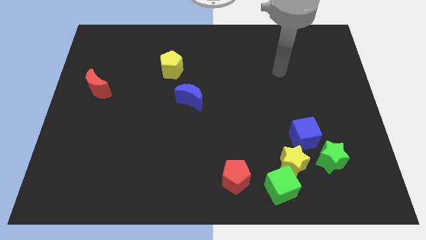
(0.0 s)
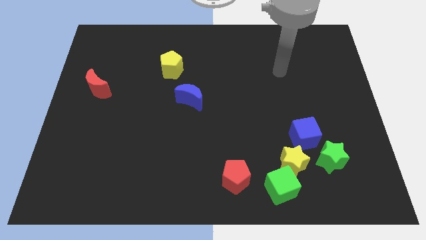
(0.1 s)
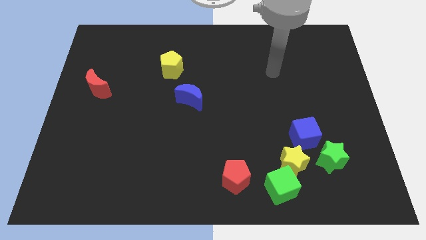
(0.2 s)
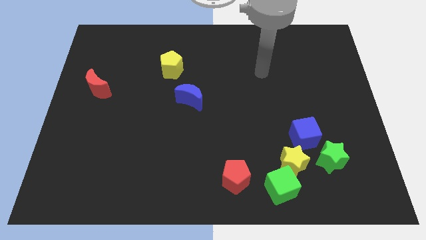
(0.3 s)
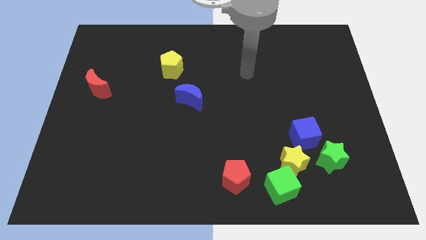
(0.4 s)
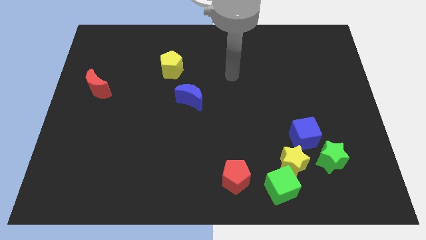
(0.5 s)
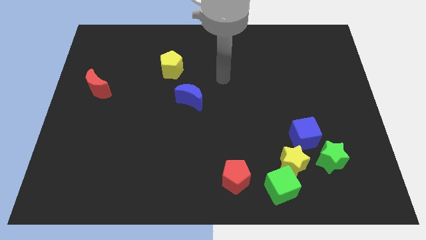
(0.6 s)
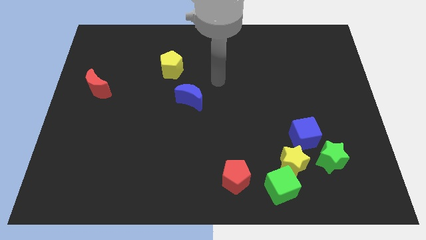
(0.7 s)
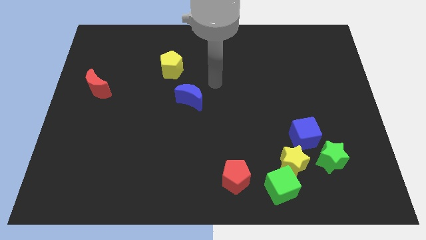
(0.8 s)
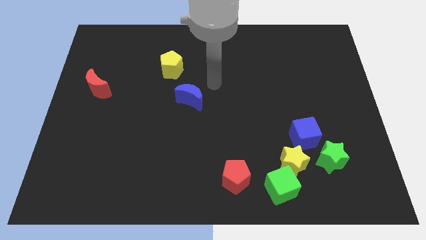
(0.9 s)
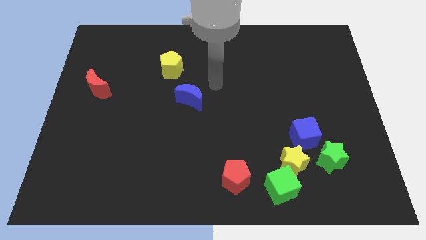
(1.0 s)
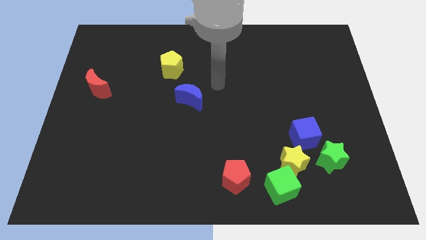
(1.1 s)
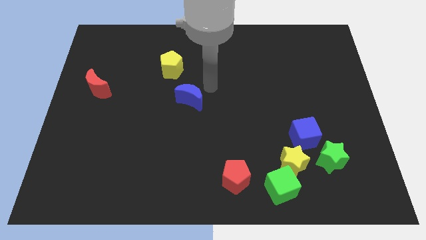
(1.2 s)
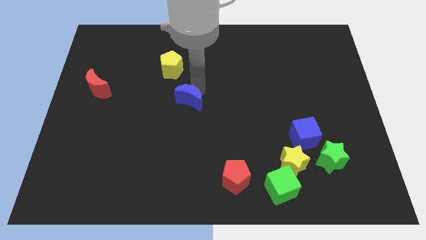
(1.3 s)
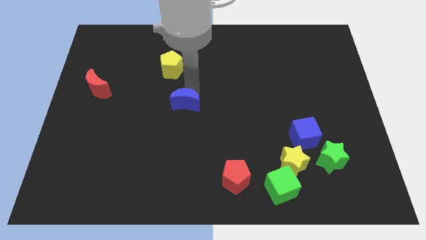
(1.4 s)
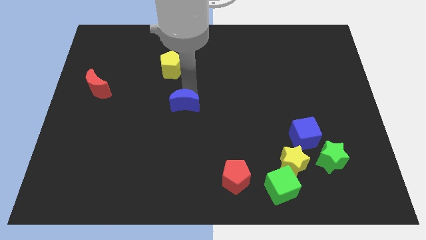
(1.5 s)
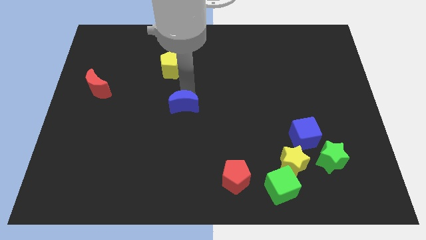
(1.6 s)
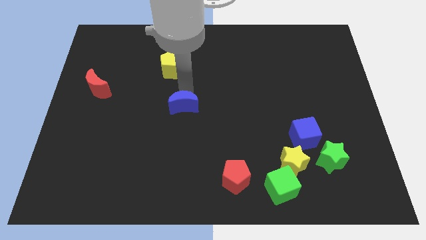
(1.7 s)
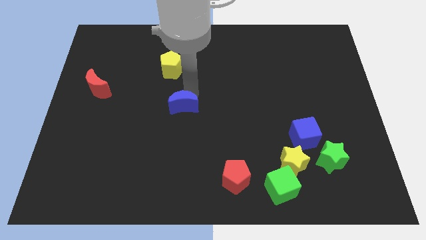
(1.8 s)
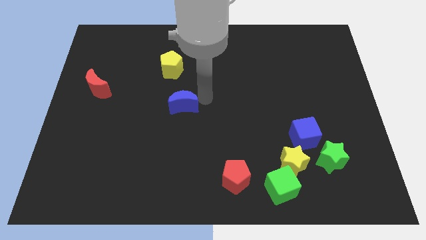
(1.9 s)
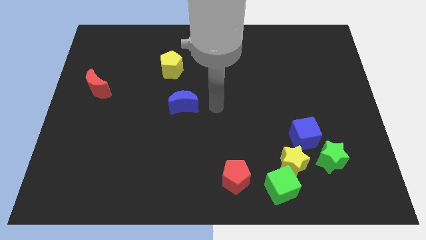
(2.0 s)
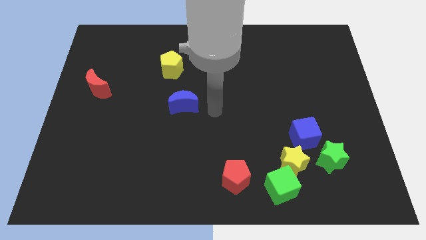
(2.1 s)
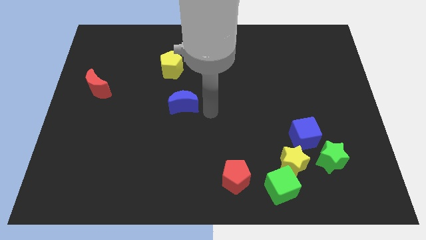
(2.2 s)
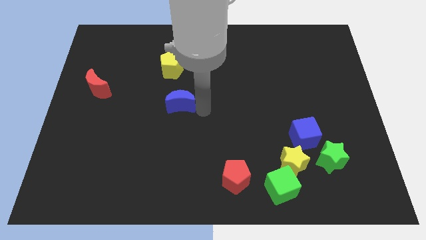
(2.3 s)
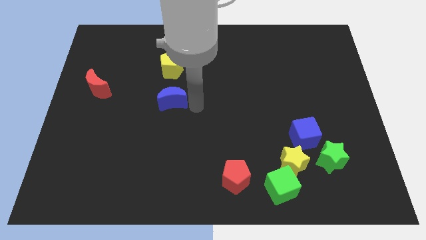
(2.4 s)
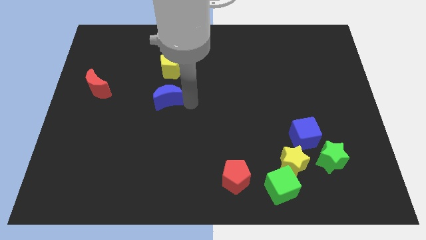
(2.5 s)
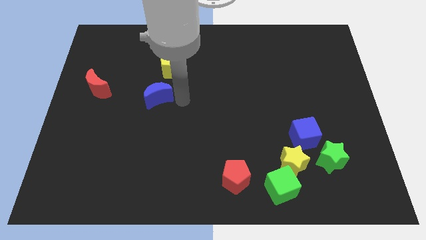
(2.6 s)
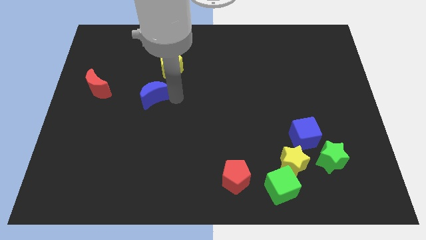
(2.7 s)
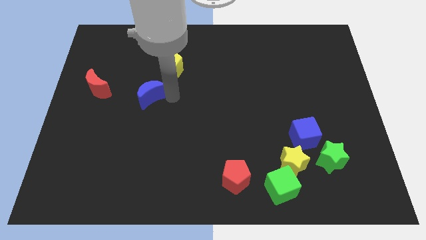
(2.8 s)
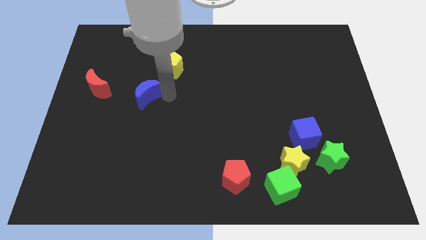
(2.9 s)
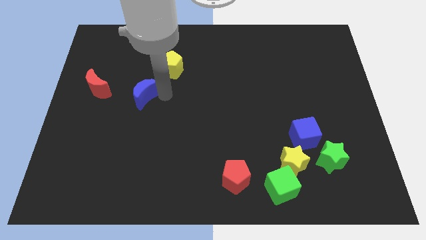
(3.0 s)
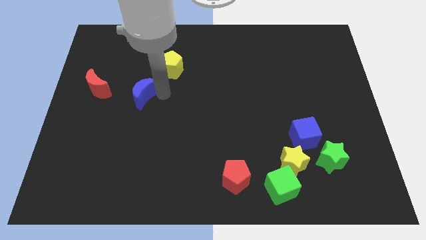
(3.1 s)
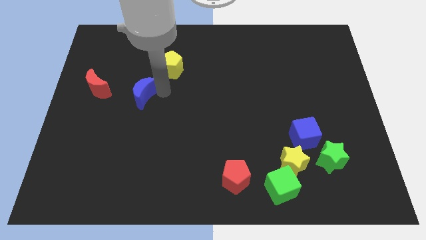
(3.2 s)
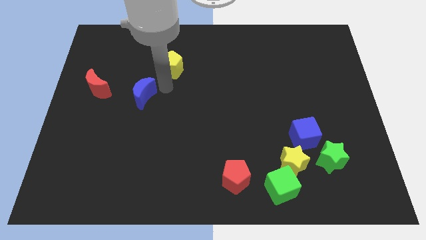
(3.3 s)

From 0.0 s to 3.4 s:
move the blue crescent to the top left of the board

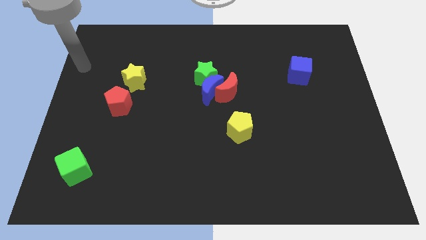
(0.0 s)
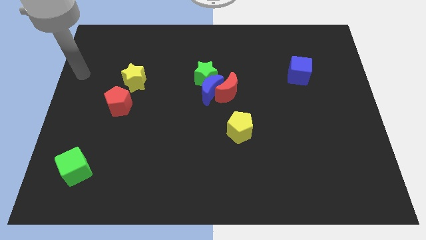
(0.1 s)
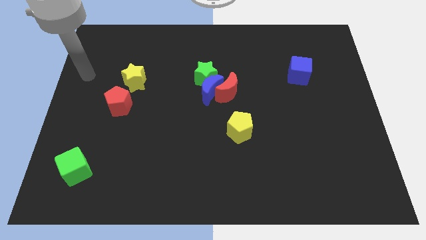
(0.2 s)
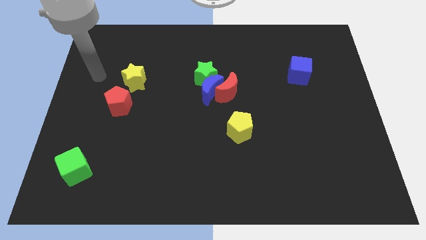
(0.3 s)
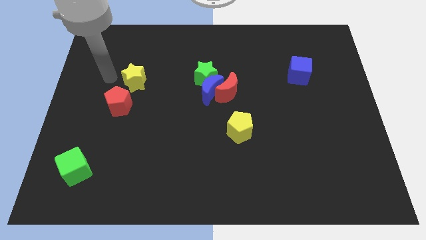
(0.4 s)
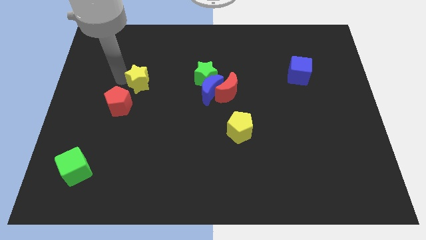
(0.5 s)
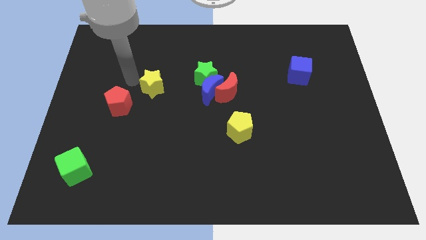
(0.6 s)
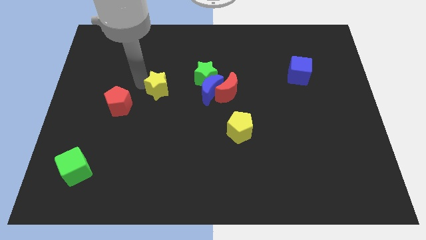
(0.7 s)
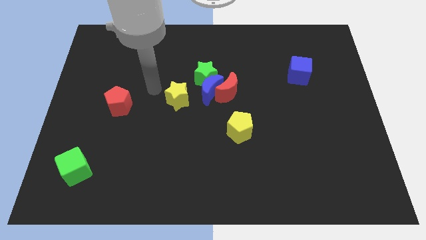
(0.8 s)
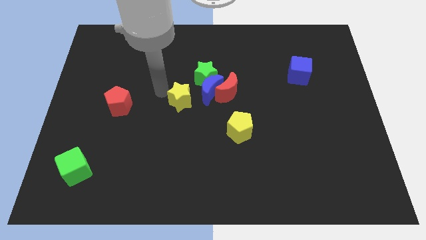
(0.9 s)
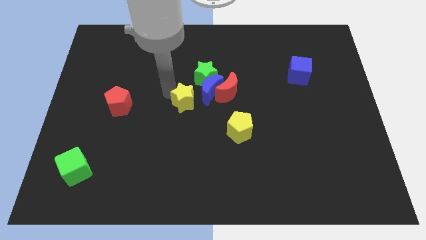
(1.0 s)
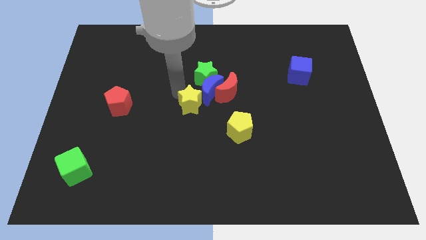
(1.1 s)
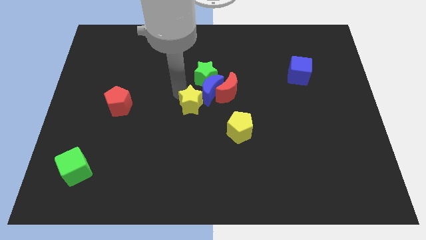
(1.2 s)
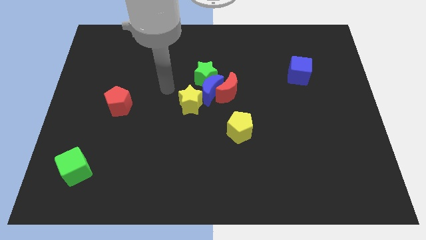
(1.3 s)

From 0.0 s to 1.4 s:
push the yellow star close to the blue crescent

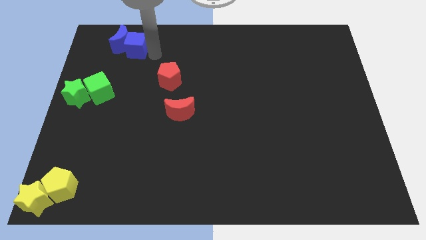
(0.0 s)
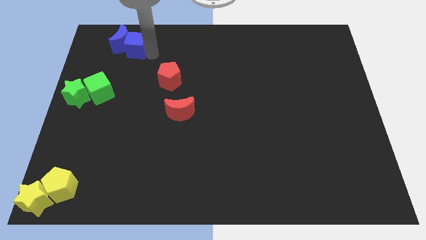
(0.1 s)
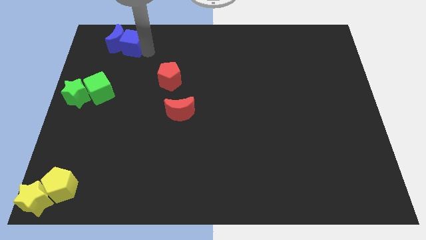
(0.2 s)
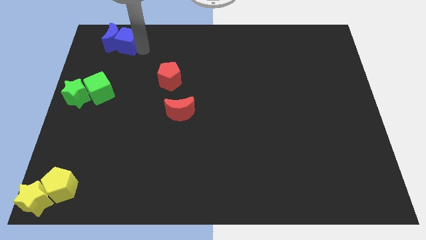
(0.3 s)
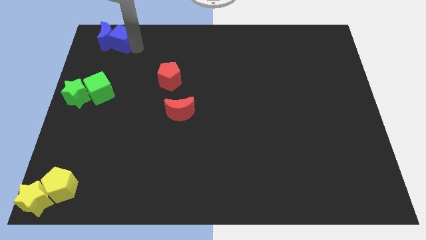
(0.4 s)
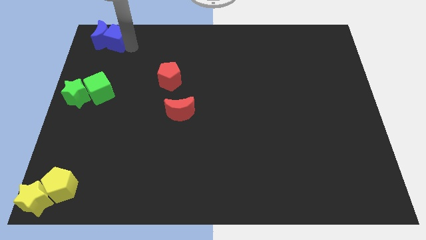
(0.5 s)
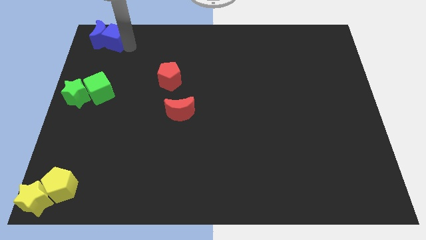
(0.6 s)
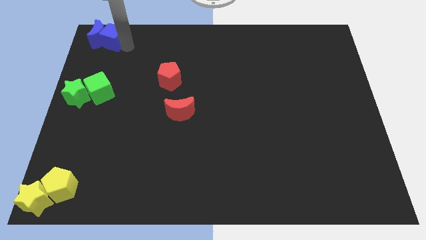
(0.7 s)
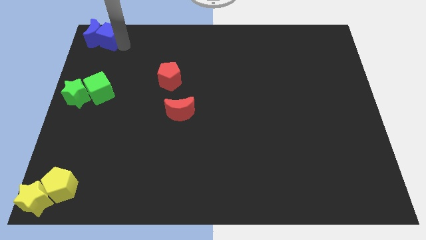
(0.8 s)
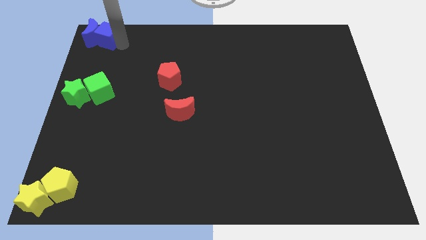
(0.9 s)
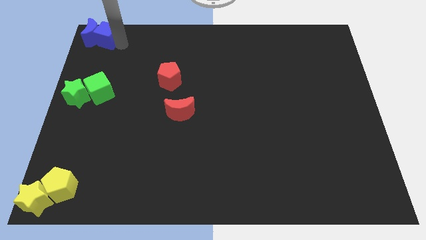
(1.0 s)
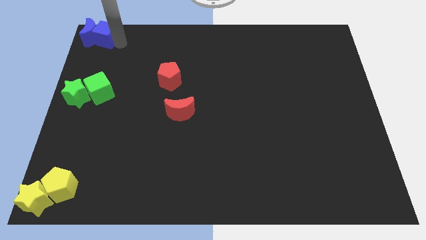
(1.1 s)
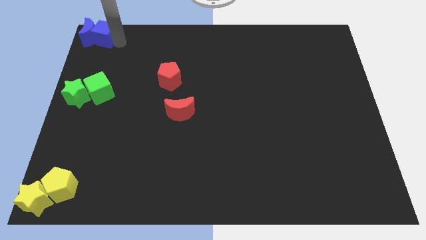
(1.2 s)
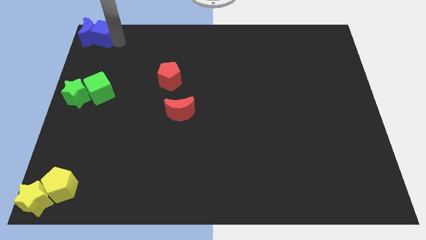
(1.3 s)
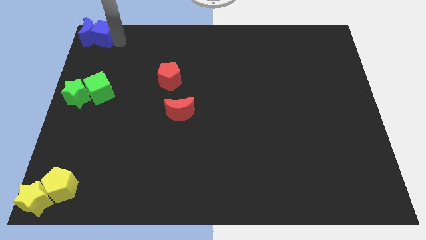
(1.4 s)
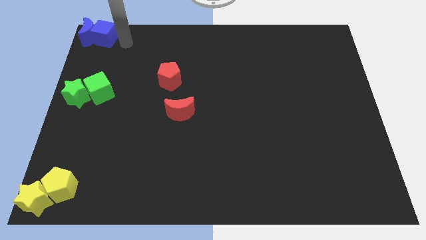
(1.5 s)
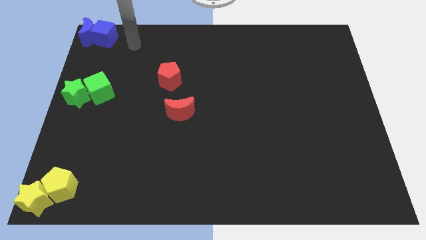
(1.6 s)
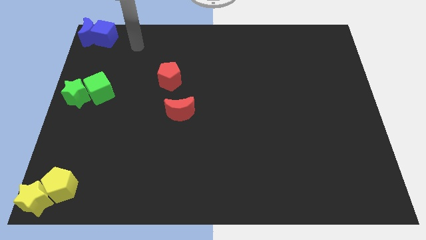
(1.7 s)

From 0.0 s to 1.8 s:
put the blue blocks at the top left corner of the board

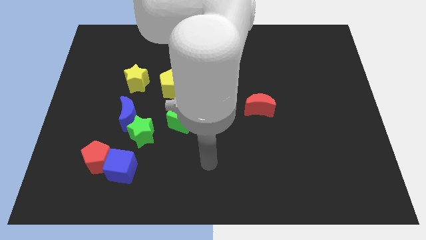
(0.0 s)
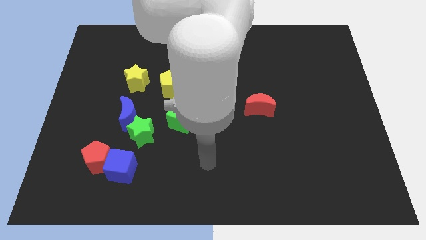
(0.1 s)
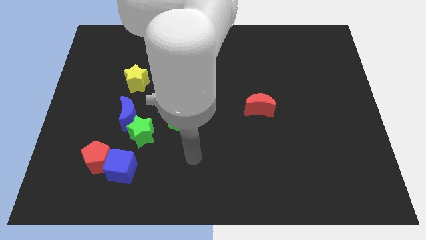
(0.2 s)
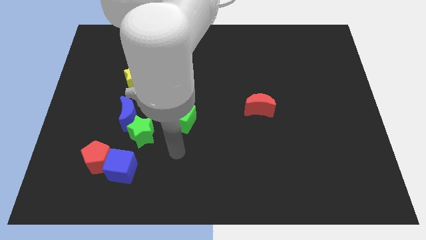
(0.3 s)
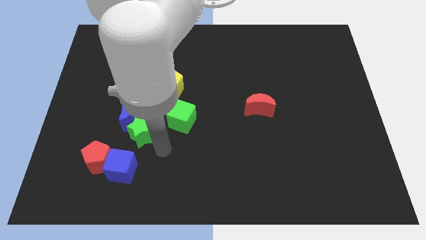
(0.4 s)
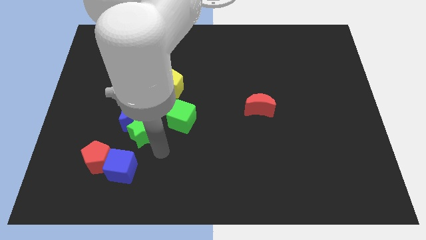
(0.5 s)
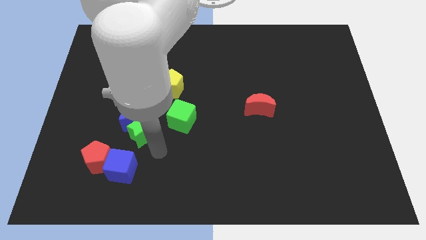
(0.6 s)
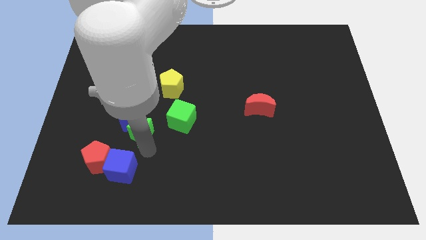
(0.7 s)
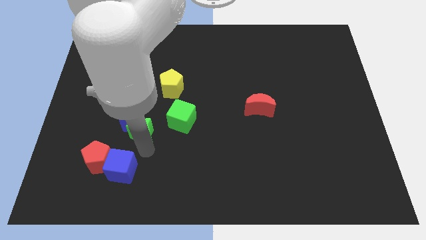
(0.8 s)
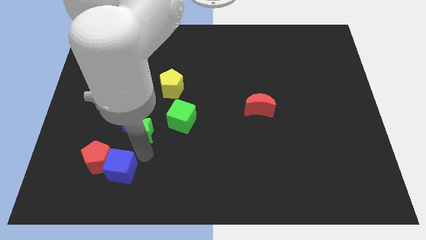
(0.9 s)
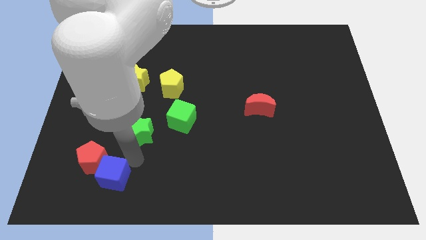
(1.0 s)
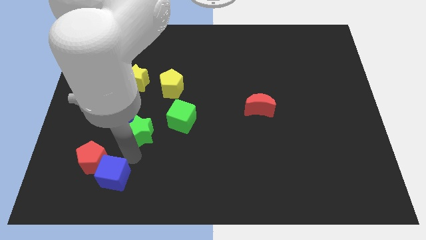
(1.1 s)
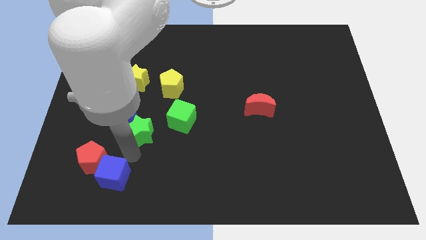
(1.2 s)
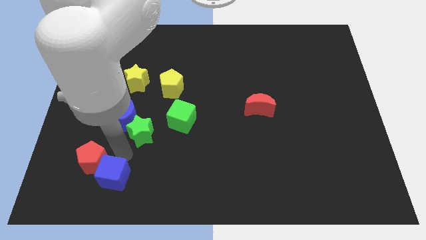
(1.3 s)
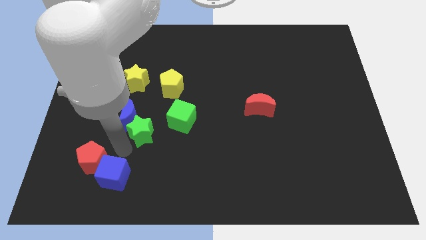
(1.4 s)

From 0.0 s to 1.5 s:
push the blue cube slightly down

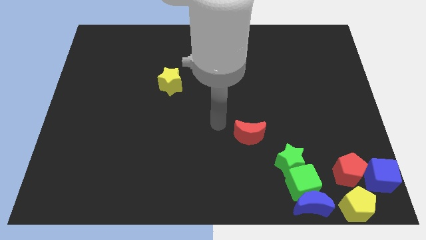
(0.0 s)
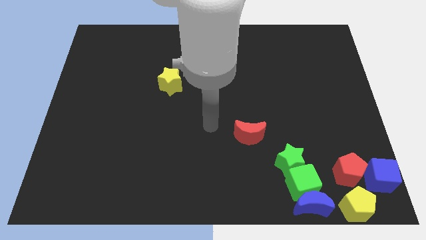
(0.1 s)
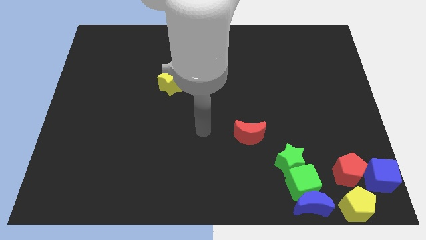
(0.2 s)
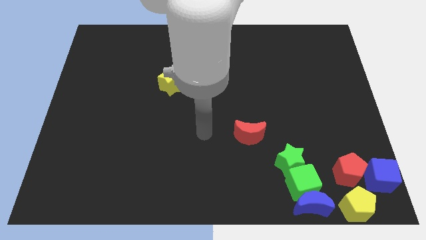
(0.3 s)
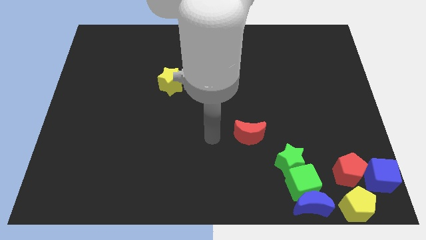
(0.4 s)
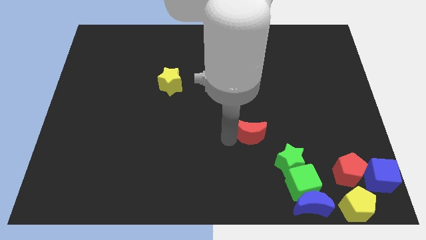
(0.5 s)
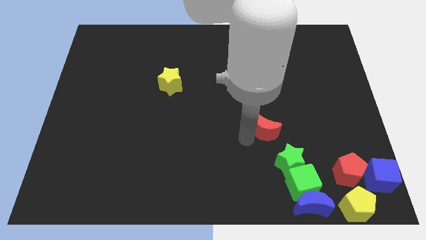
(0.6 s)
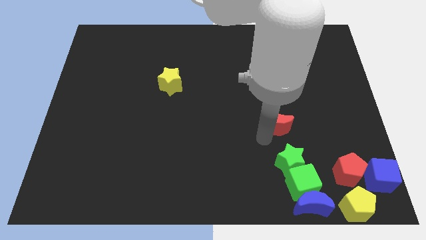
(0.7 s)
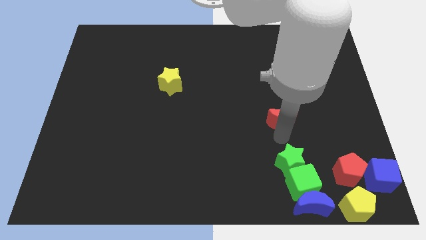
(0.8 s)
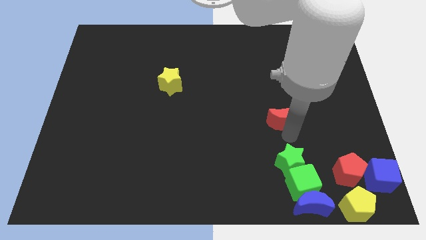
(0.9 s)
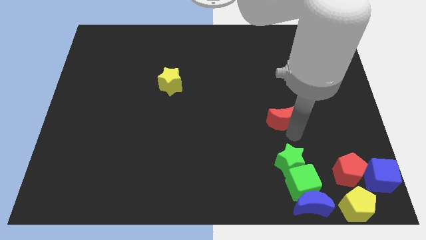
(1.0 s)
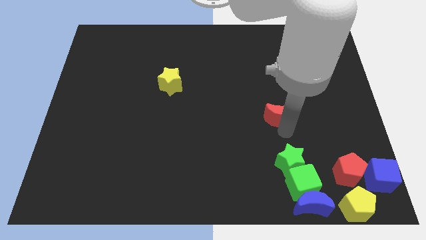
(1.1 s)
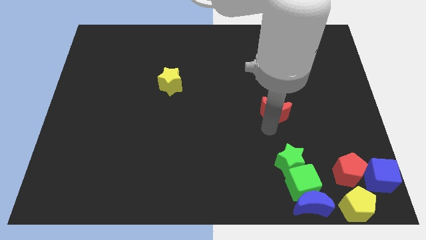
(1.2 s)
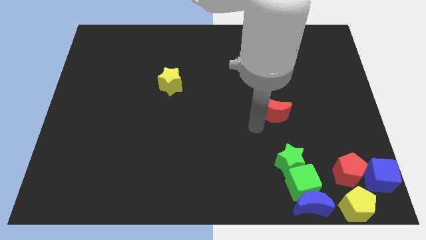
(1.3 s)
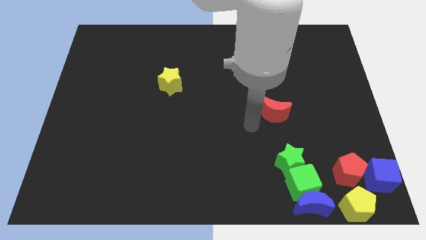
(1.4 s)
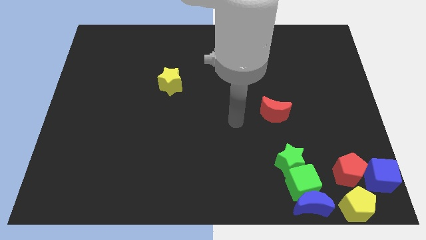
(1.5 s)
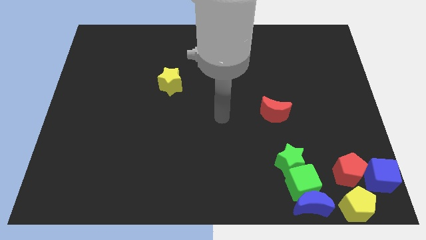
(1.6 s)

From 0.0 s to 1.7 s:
place the red moon vertically above the green star
